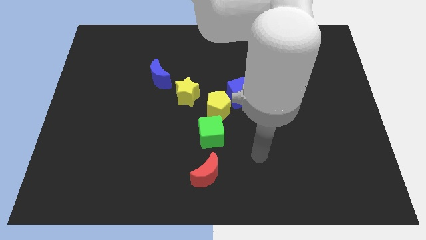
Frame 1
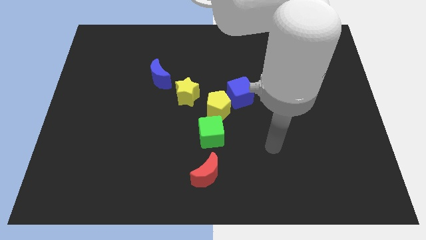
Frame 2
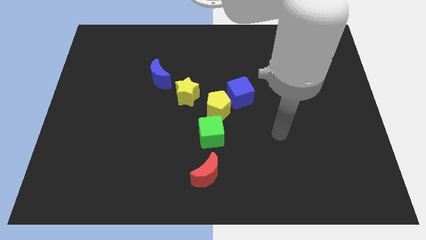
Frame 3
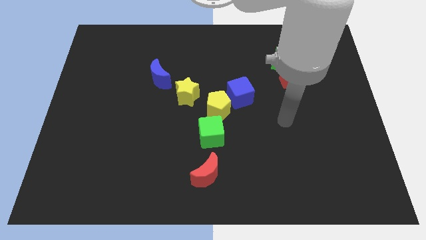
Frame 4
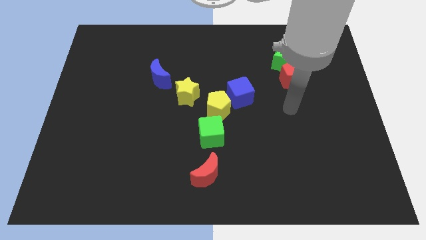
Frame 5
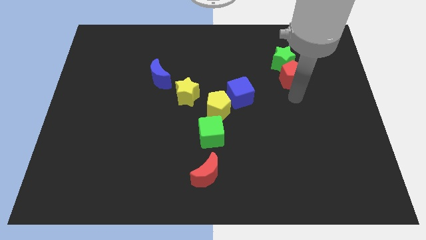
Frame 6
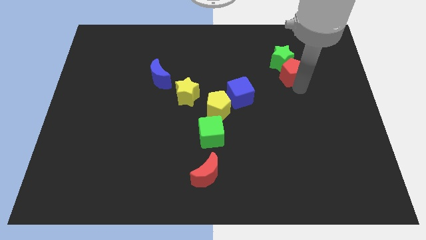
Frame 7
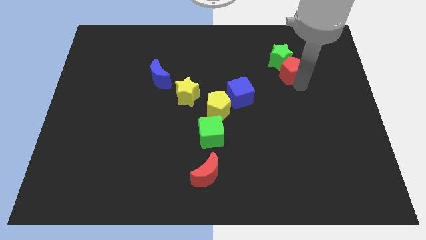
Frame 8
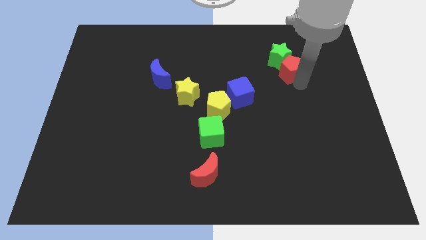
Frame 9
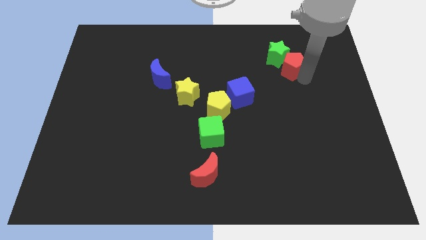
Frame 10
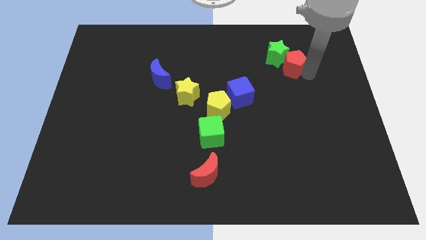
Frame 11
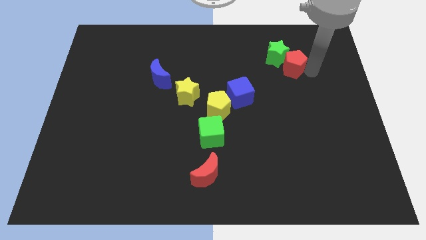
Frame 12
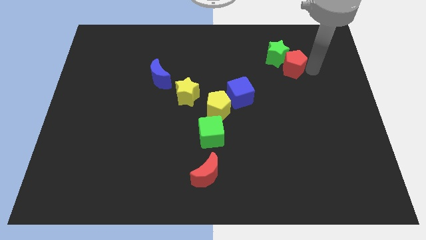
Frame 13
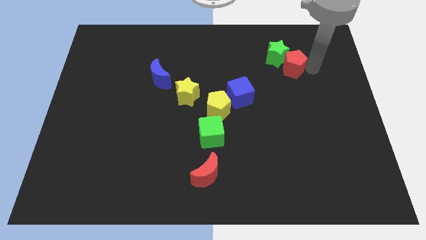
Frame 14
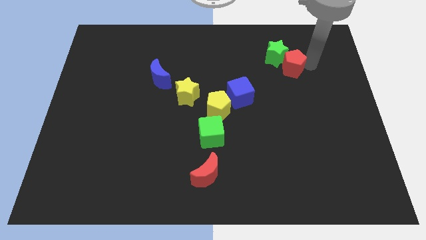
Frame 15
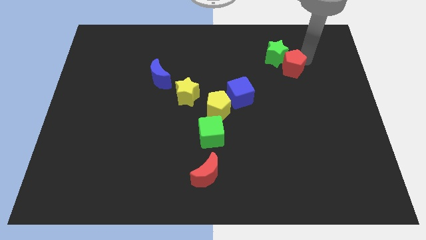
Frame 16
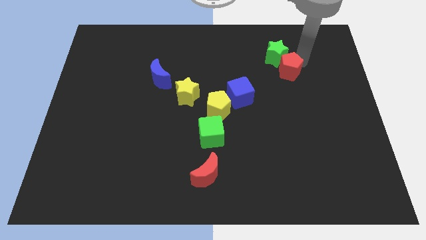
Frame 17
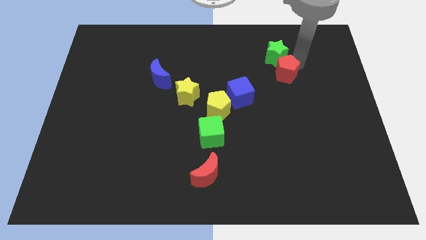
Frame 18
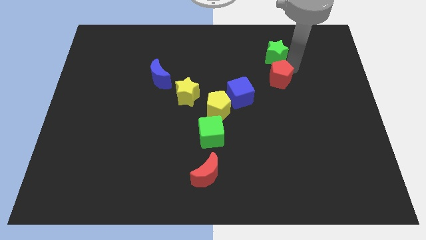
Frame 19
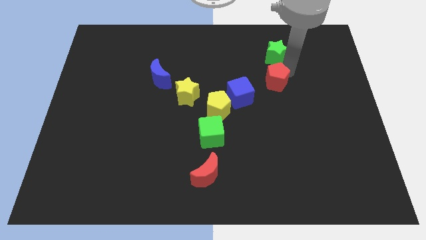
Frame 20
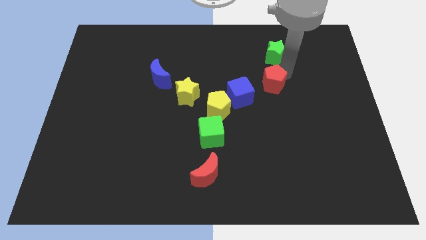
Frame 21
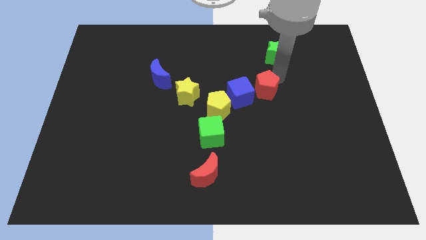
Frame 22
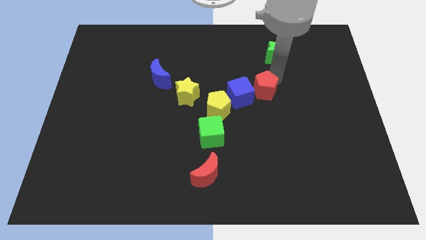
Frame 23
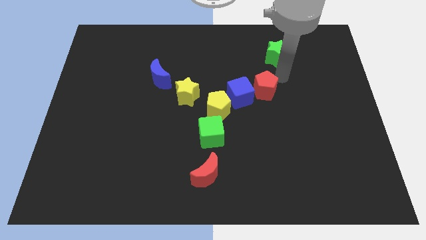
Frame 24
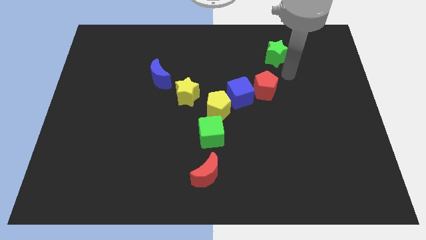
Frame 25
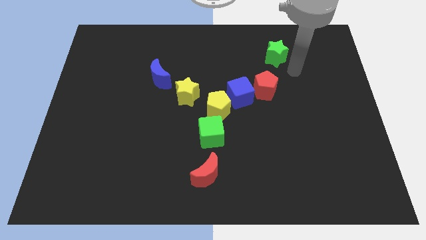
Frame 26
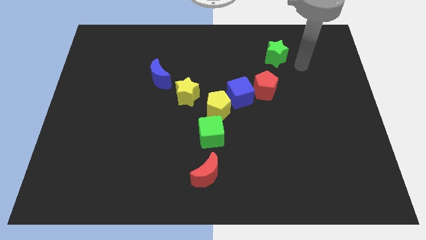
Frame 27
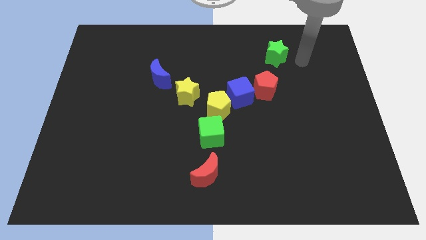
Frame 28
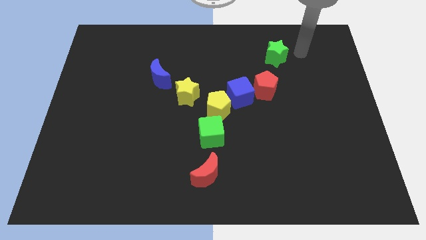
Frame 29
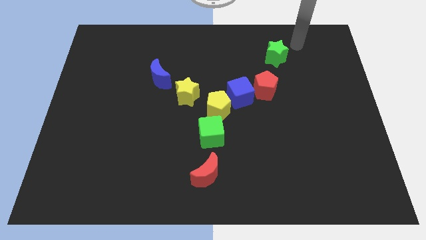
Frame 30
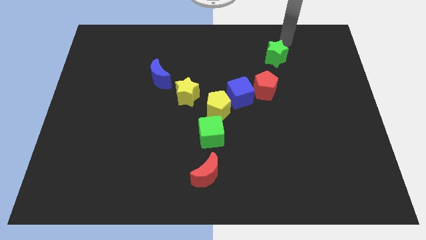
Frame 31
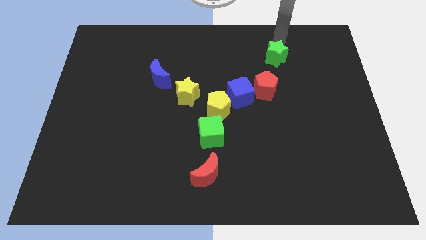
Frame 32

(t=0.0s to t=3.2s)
push the red pentagon into the blue cube

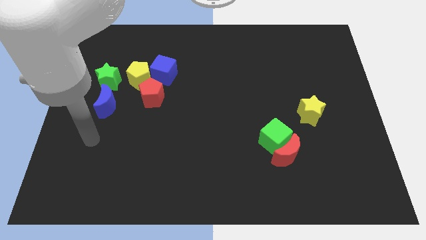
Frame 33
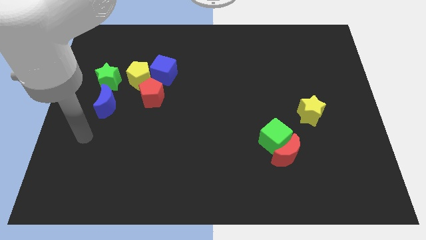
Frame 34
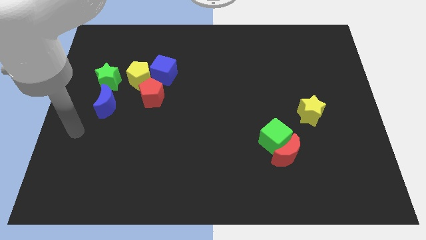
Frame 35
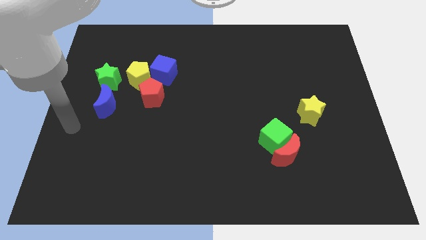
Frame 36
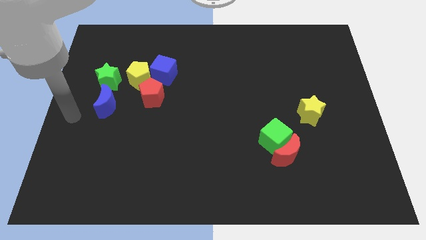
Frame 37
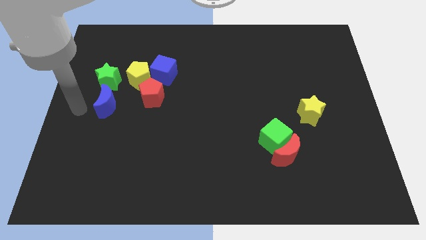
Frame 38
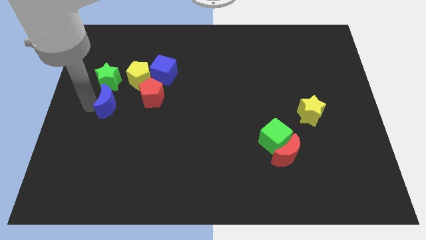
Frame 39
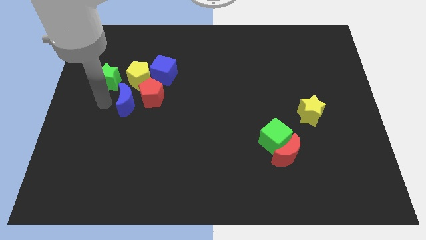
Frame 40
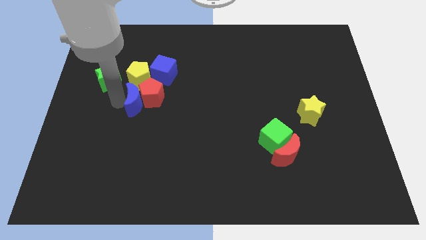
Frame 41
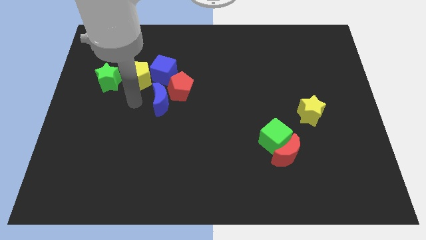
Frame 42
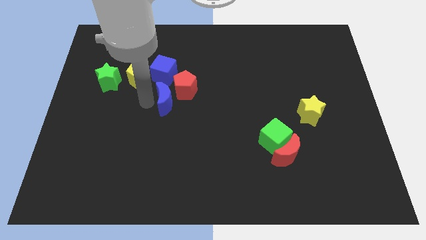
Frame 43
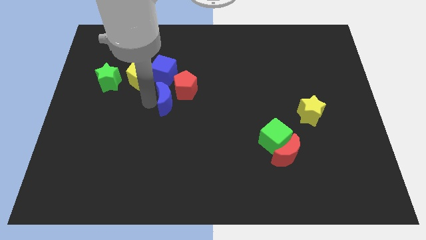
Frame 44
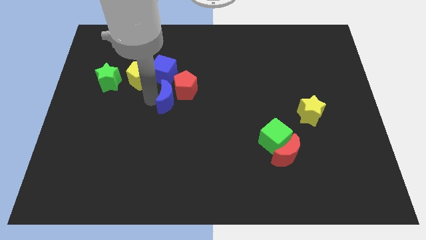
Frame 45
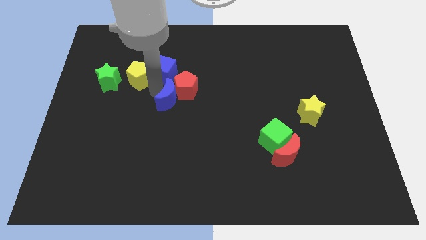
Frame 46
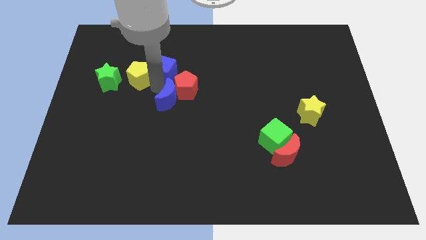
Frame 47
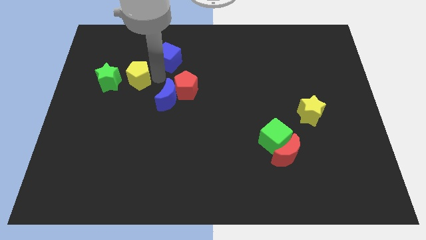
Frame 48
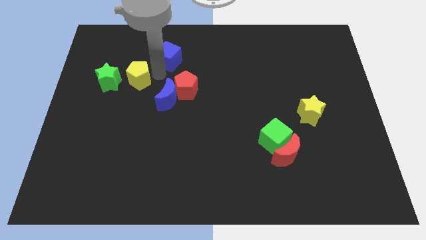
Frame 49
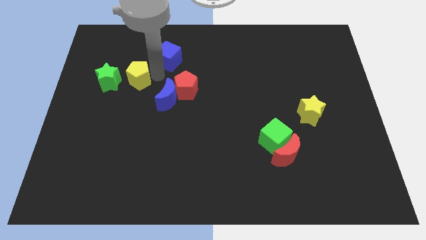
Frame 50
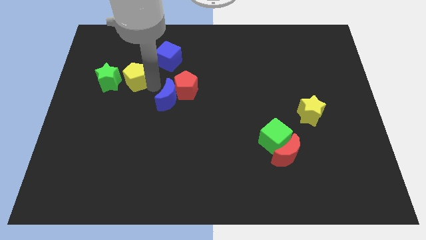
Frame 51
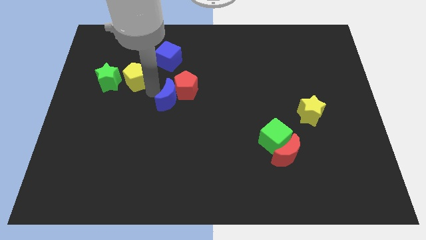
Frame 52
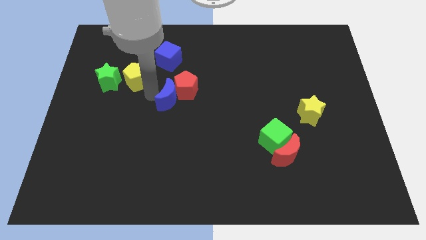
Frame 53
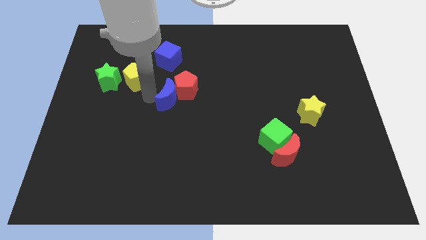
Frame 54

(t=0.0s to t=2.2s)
push blue crescent into red pentagon

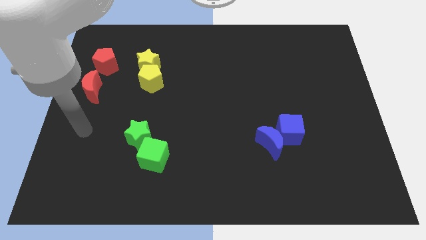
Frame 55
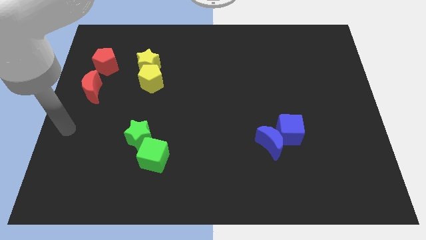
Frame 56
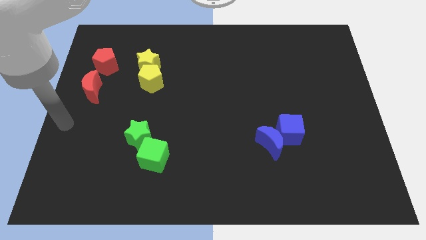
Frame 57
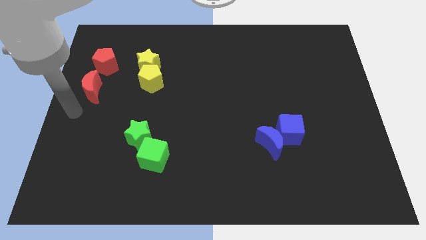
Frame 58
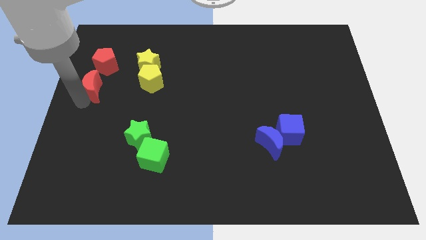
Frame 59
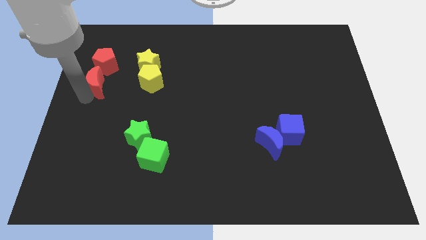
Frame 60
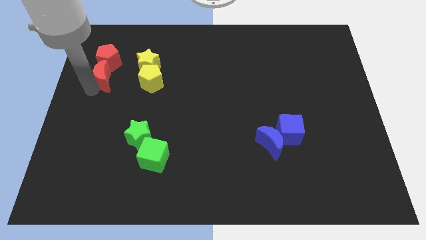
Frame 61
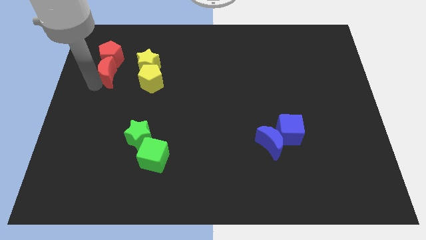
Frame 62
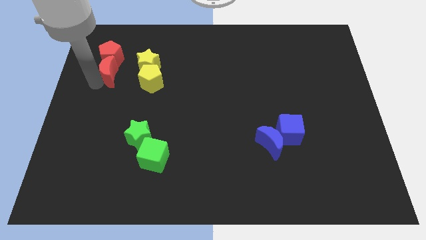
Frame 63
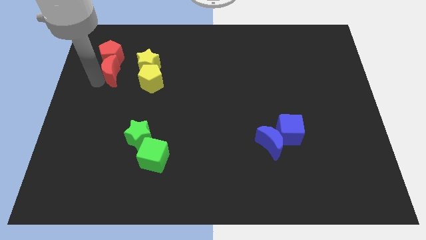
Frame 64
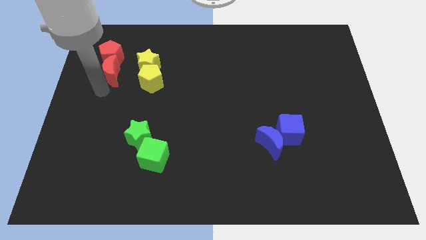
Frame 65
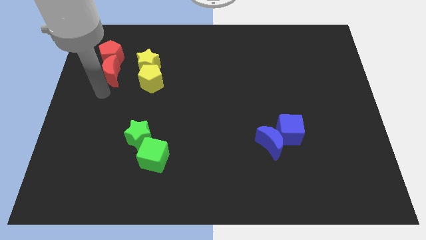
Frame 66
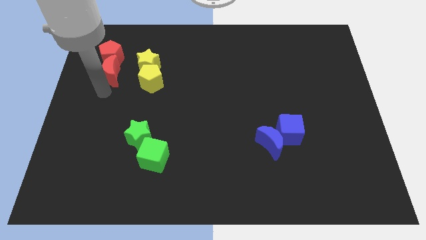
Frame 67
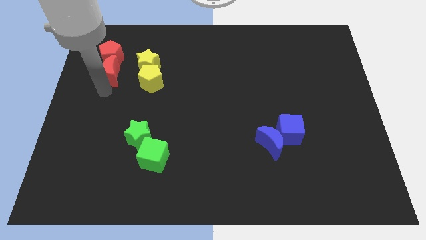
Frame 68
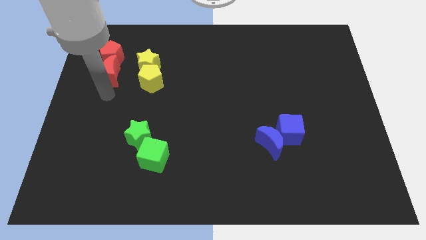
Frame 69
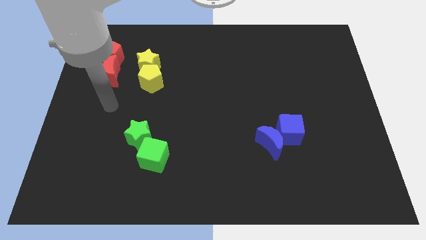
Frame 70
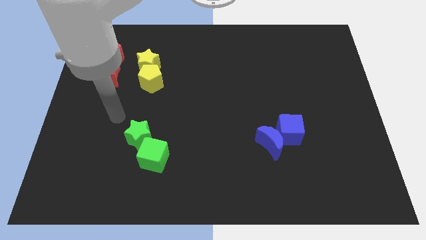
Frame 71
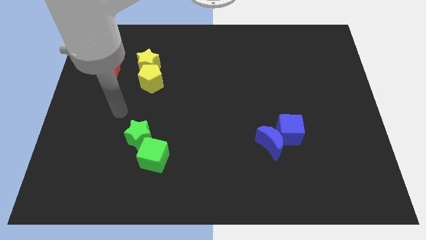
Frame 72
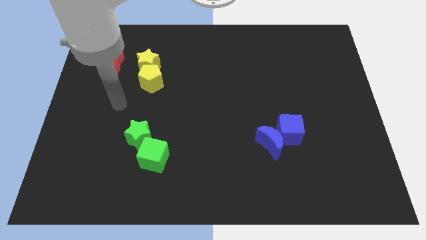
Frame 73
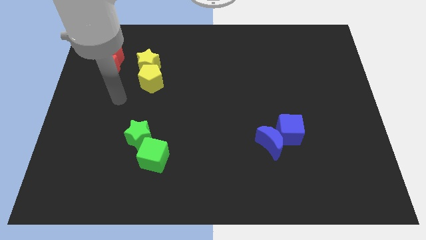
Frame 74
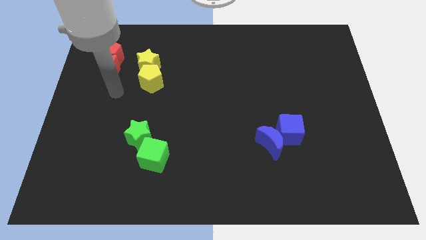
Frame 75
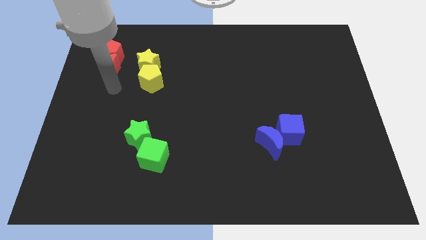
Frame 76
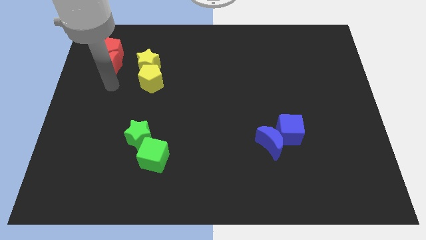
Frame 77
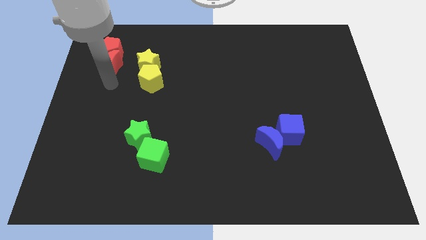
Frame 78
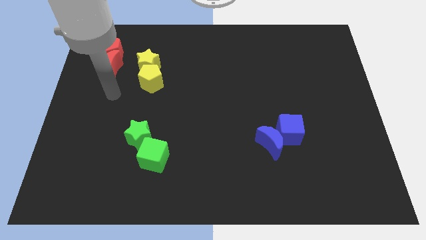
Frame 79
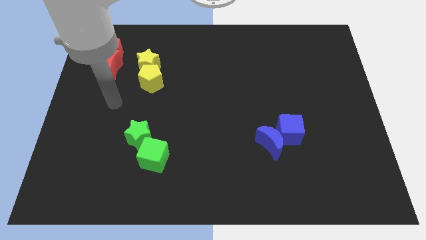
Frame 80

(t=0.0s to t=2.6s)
move the red crescent to the bottom right of red pentagon

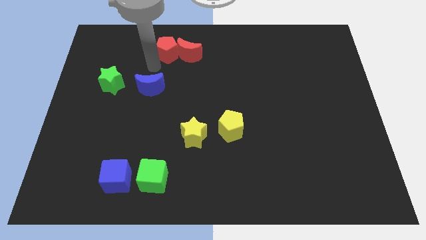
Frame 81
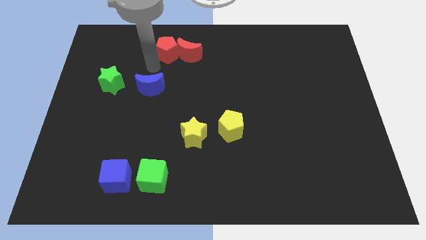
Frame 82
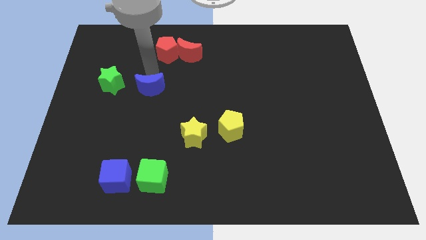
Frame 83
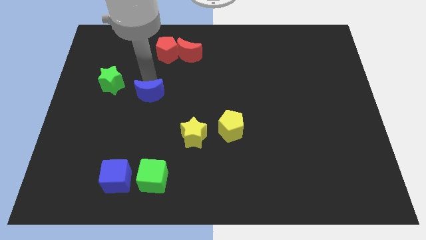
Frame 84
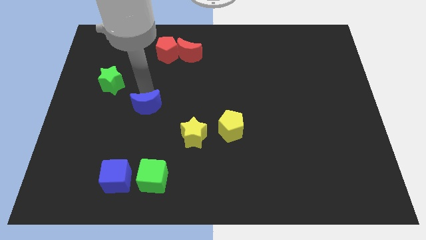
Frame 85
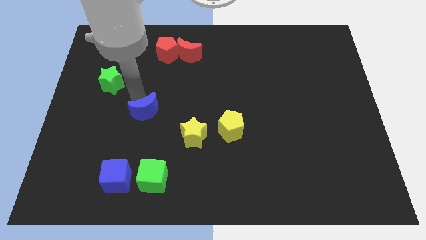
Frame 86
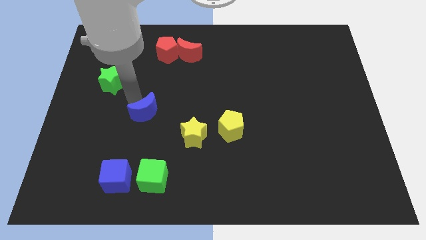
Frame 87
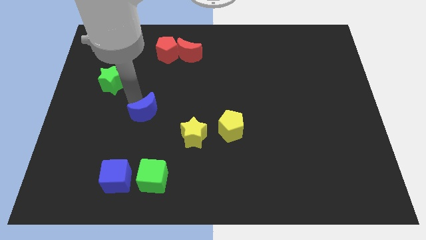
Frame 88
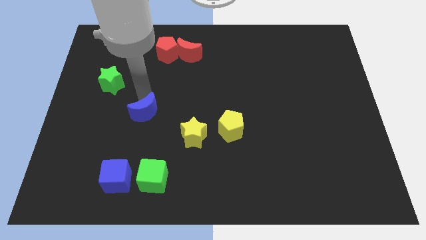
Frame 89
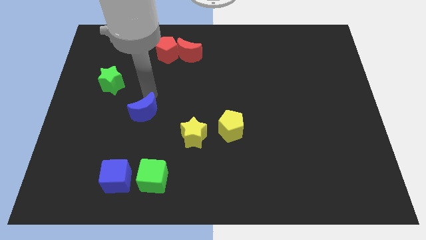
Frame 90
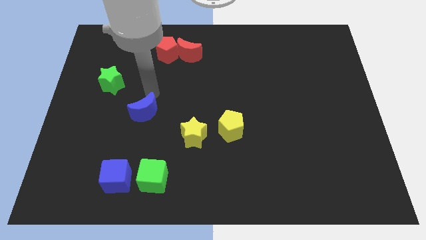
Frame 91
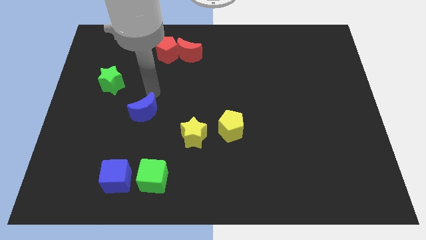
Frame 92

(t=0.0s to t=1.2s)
place the blue moon in between the green star and yellow star
